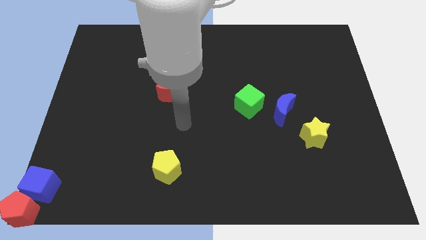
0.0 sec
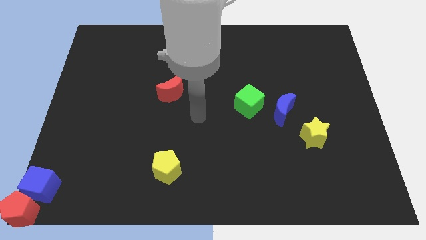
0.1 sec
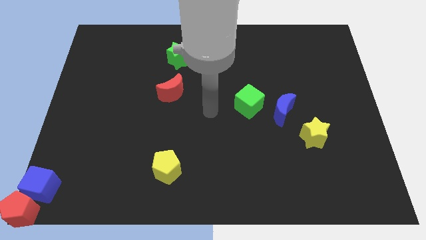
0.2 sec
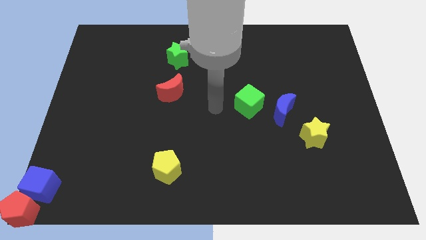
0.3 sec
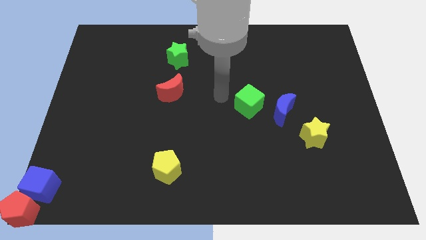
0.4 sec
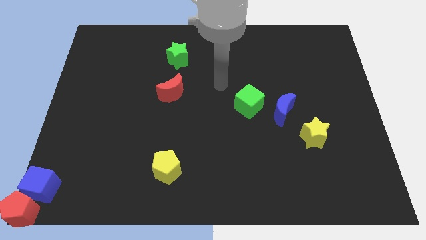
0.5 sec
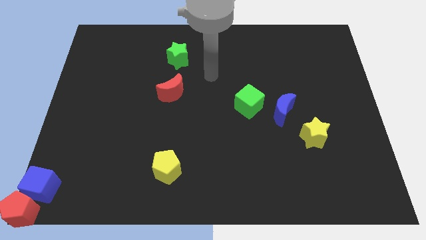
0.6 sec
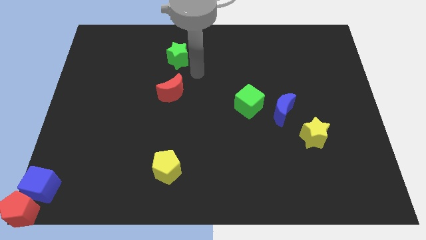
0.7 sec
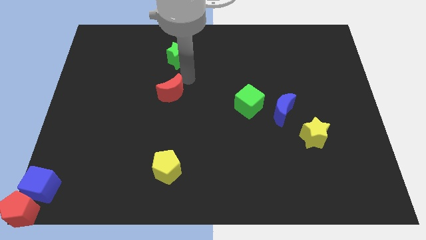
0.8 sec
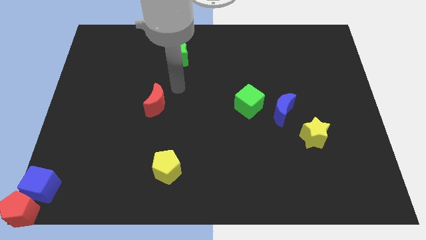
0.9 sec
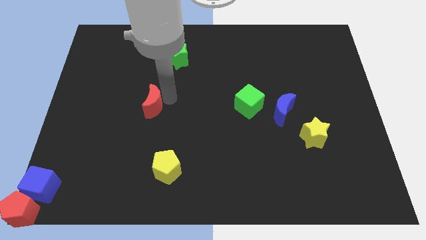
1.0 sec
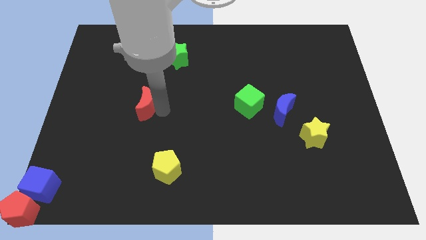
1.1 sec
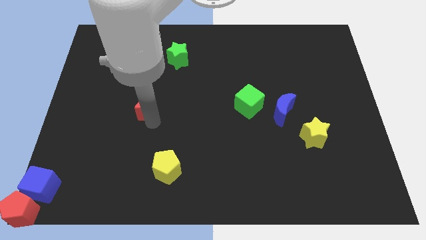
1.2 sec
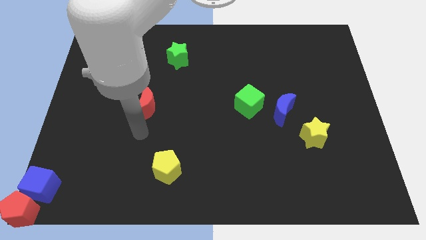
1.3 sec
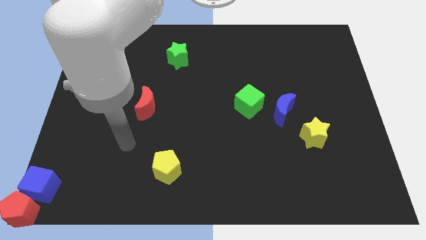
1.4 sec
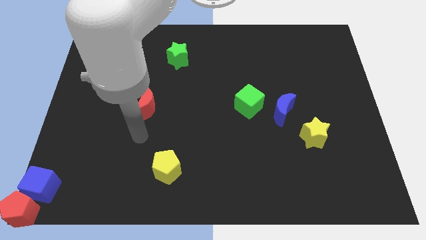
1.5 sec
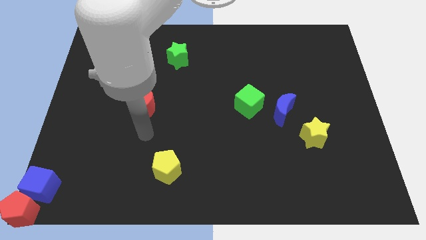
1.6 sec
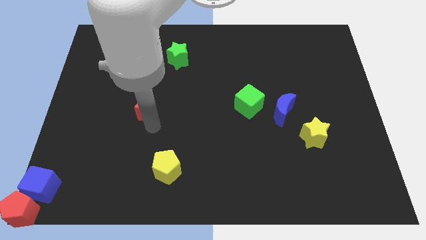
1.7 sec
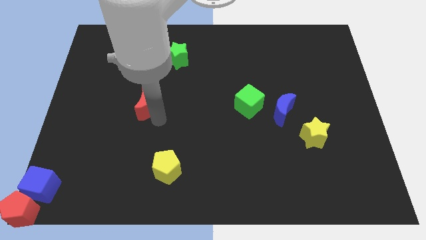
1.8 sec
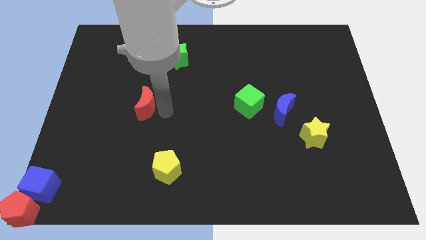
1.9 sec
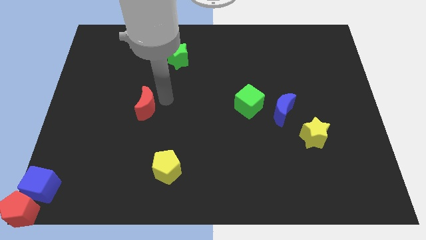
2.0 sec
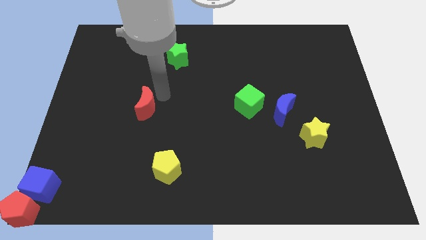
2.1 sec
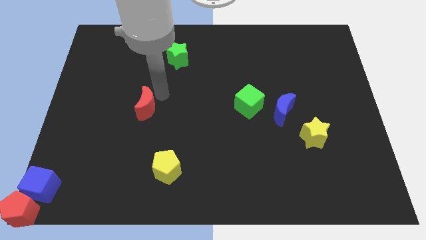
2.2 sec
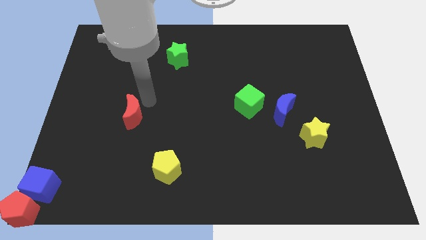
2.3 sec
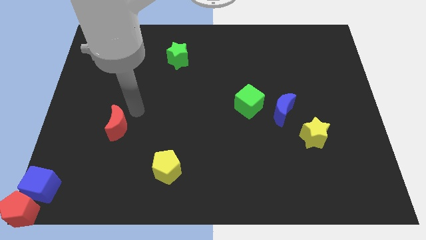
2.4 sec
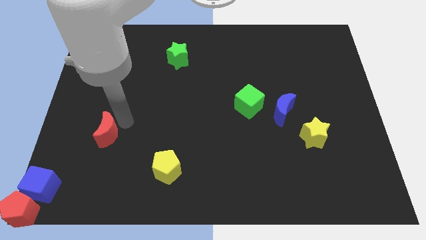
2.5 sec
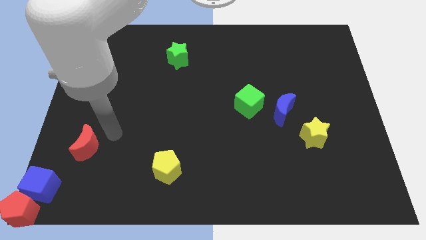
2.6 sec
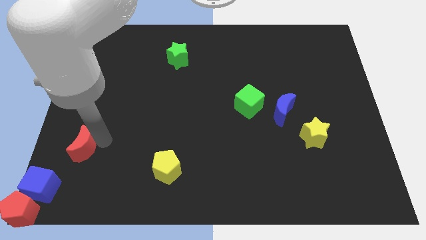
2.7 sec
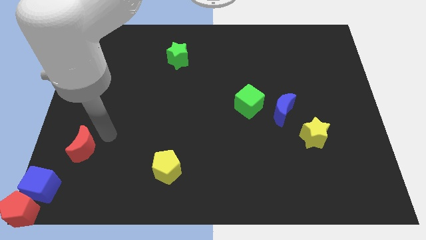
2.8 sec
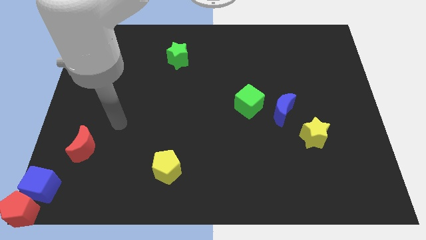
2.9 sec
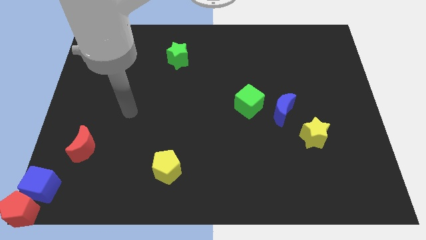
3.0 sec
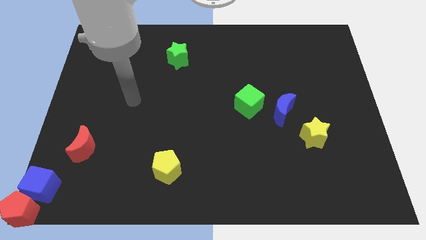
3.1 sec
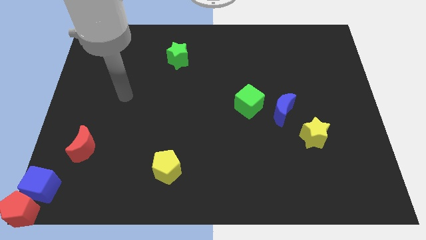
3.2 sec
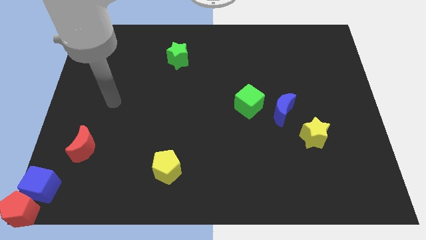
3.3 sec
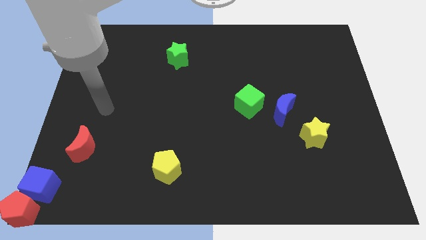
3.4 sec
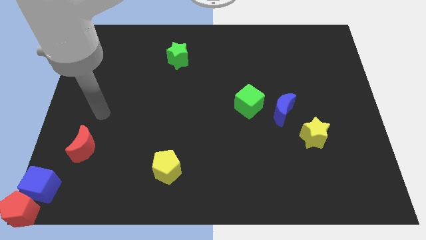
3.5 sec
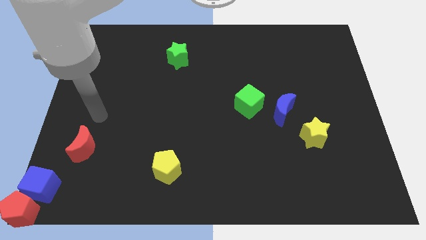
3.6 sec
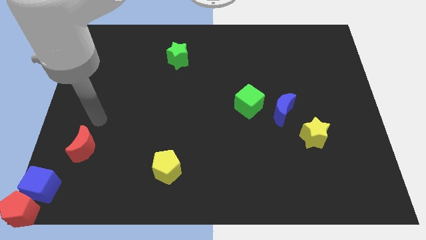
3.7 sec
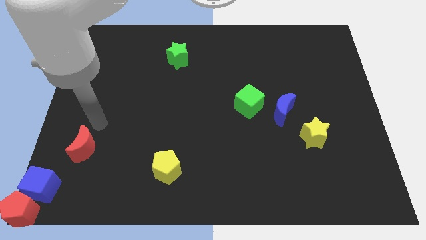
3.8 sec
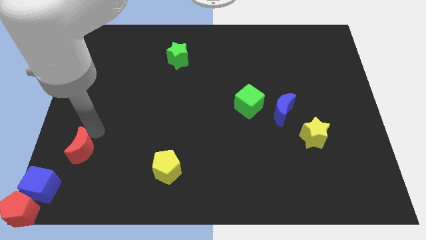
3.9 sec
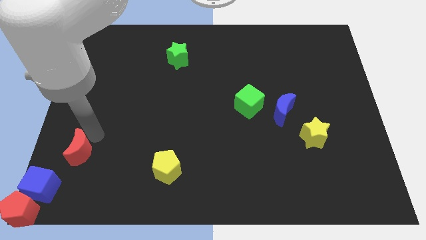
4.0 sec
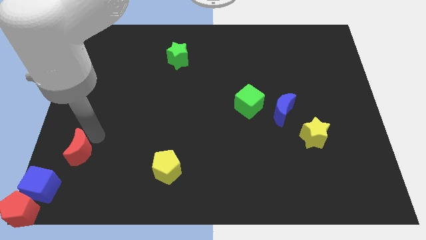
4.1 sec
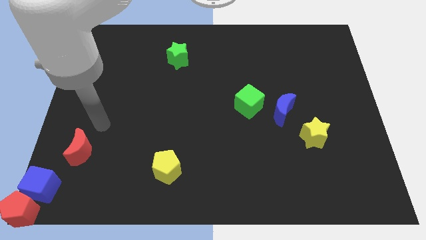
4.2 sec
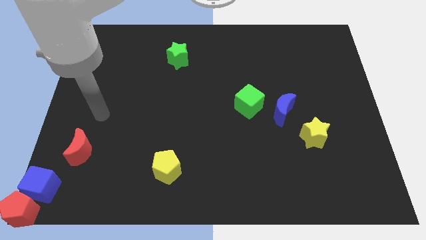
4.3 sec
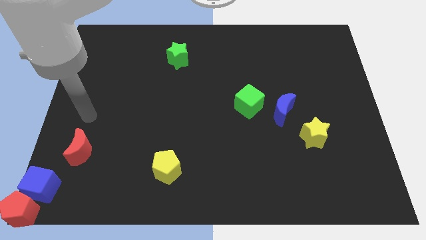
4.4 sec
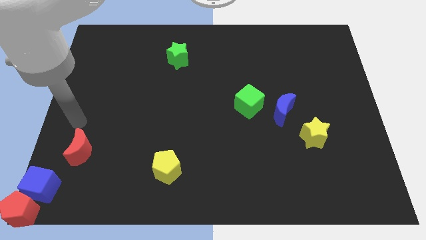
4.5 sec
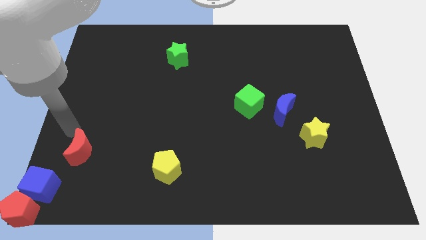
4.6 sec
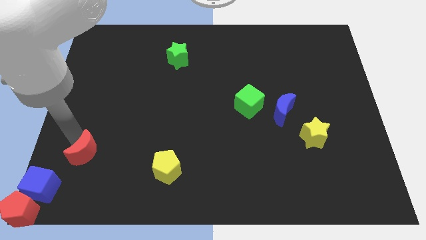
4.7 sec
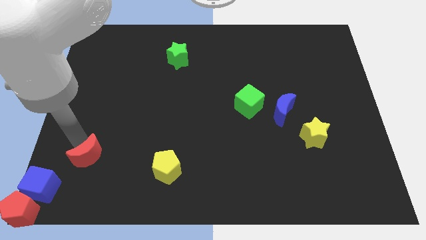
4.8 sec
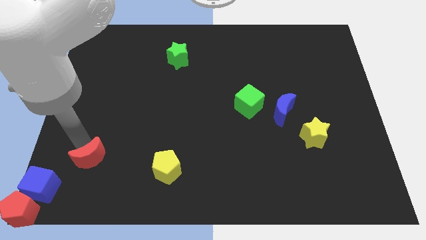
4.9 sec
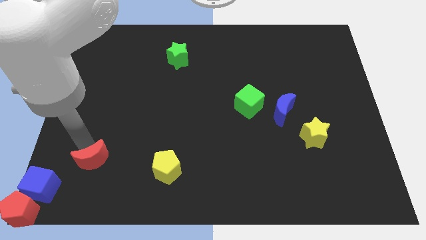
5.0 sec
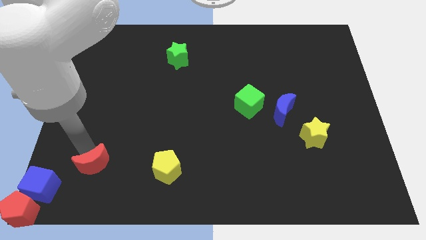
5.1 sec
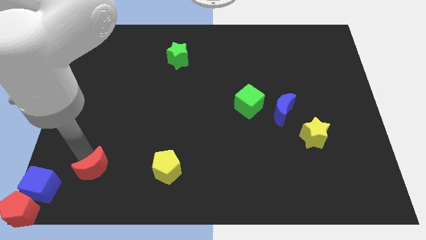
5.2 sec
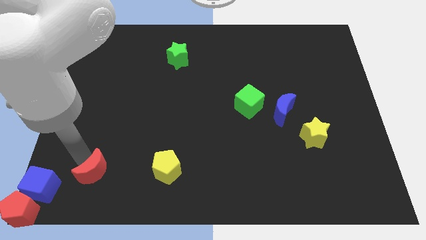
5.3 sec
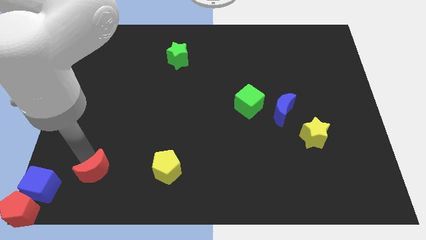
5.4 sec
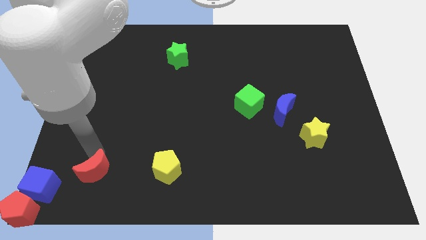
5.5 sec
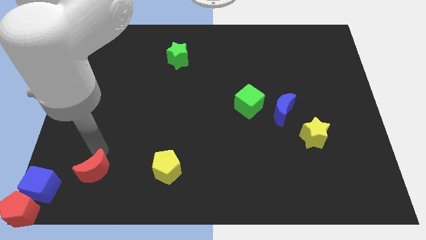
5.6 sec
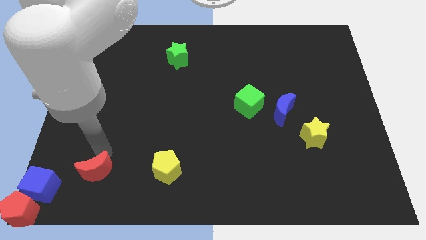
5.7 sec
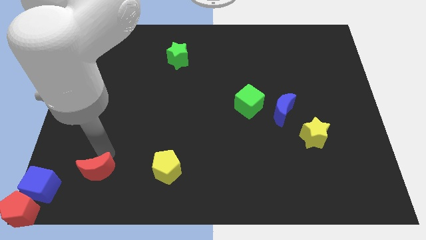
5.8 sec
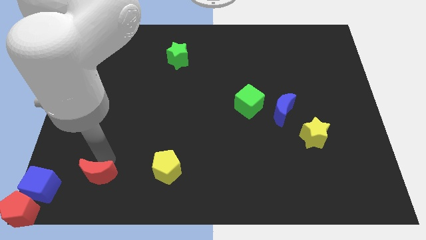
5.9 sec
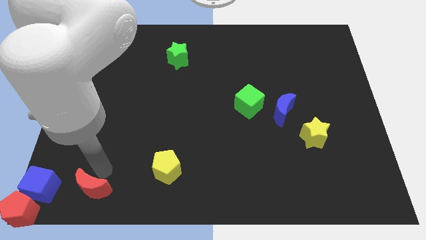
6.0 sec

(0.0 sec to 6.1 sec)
move the red crescent right to the blue cube

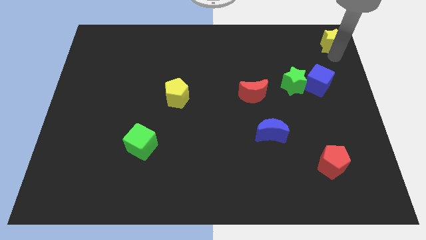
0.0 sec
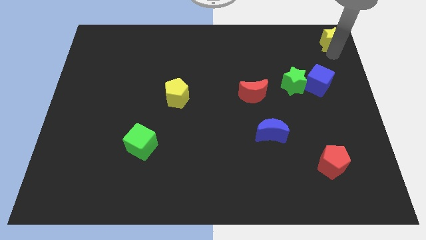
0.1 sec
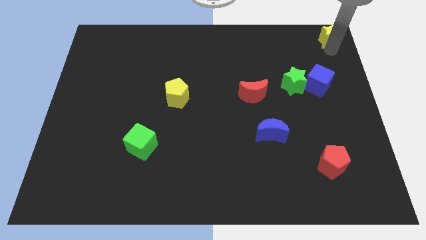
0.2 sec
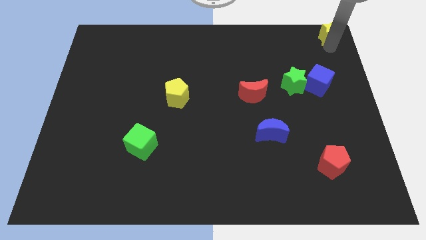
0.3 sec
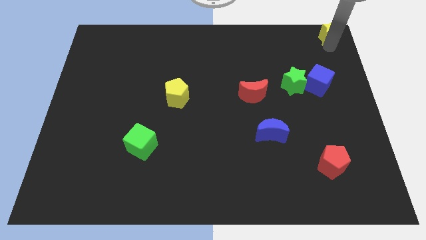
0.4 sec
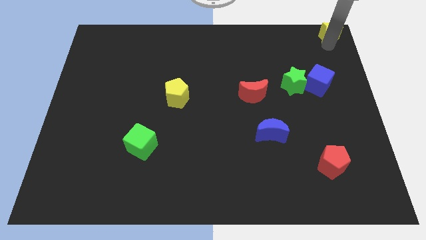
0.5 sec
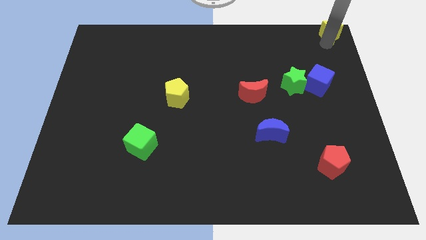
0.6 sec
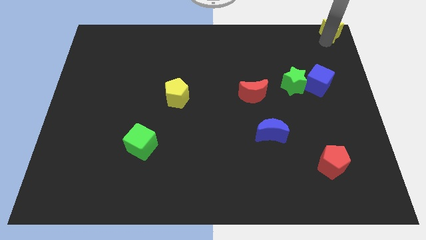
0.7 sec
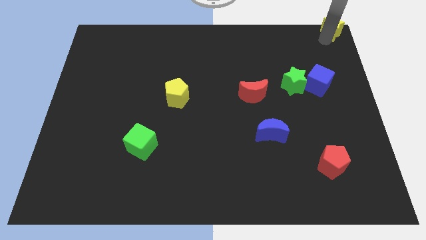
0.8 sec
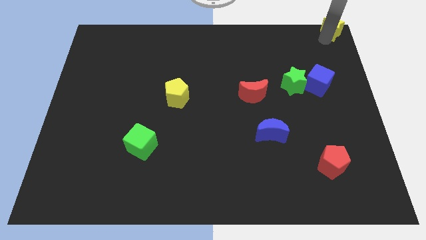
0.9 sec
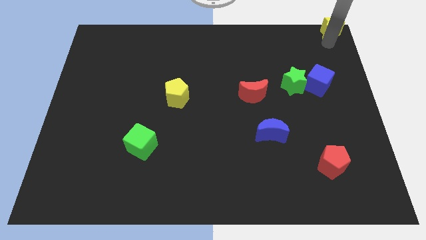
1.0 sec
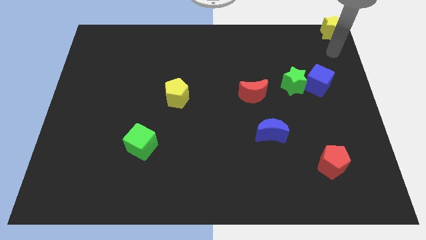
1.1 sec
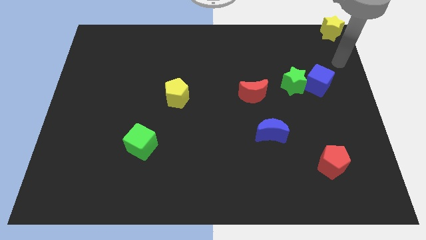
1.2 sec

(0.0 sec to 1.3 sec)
move the yellow star to the top right corner of the board

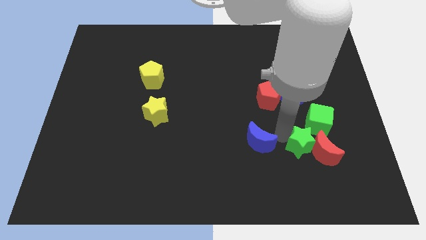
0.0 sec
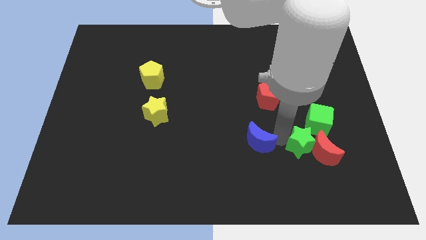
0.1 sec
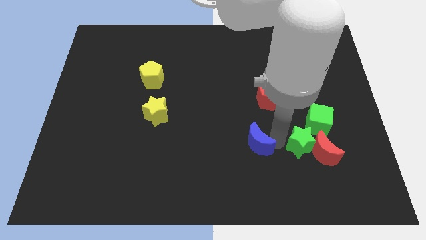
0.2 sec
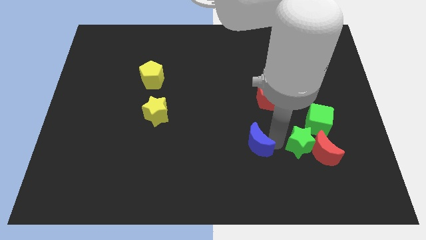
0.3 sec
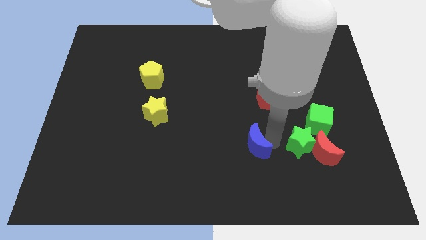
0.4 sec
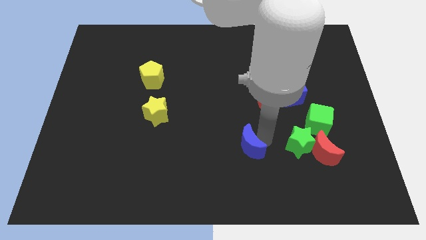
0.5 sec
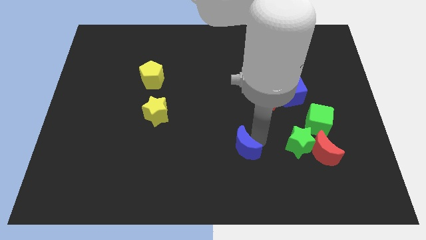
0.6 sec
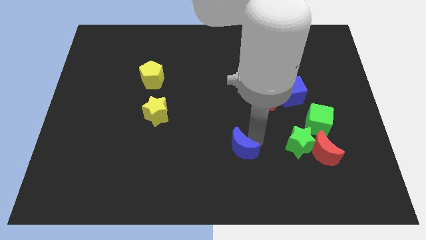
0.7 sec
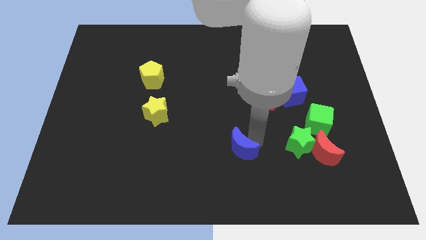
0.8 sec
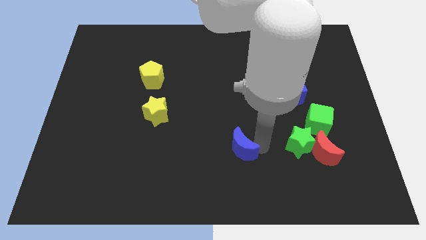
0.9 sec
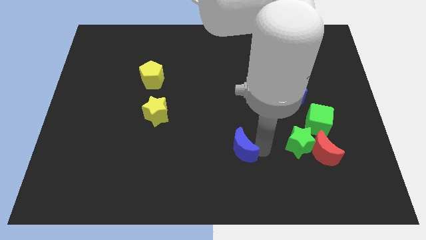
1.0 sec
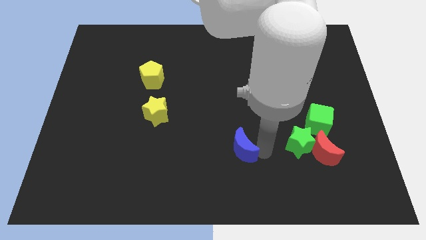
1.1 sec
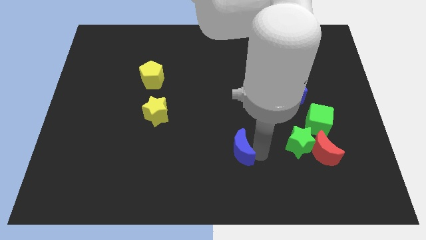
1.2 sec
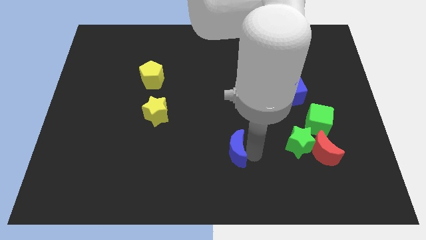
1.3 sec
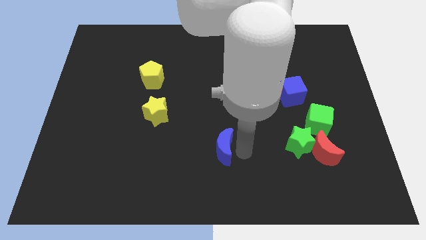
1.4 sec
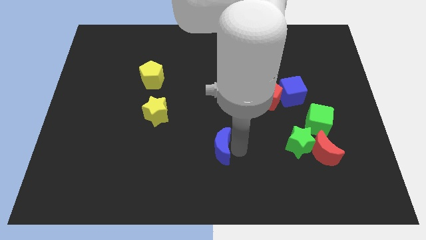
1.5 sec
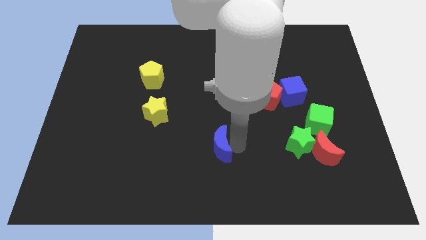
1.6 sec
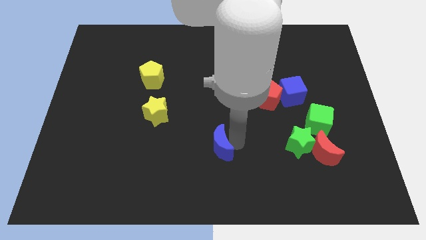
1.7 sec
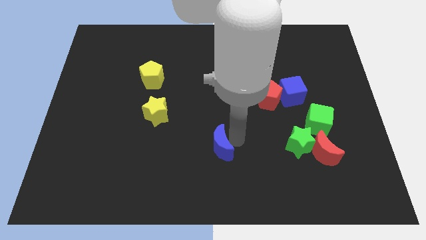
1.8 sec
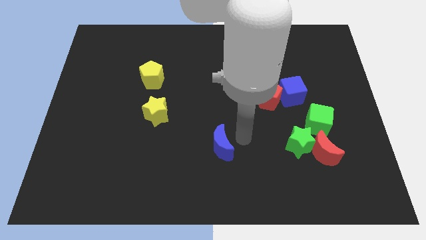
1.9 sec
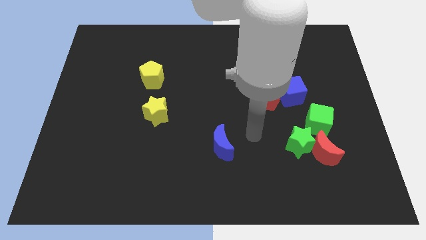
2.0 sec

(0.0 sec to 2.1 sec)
move the blue moon away from the green star
